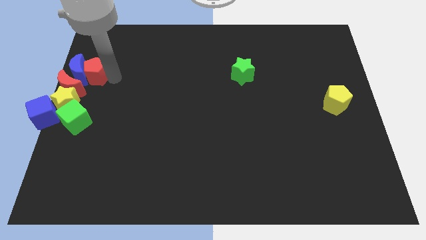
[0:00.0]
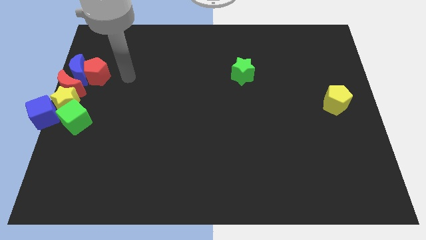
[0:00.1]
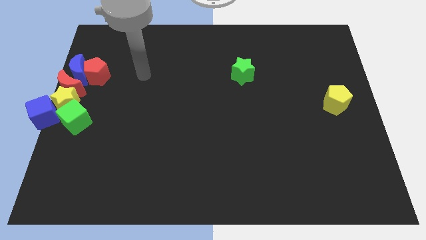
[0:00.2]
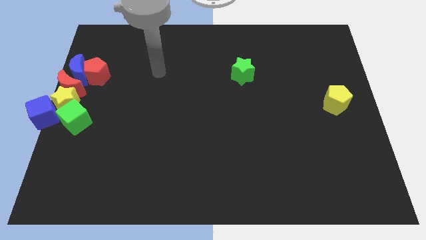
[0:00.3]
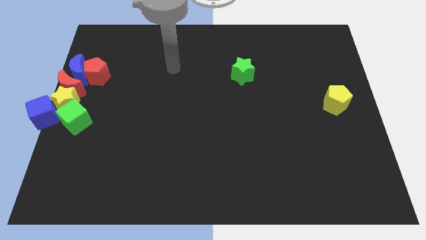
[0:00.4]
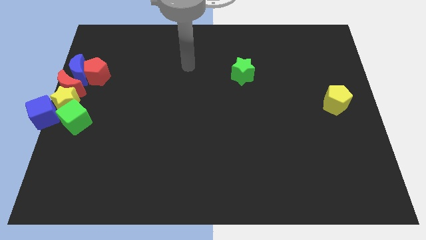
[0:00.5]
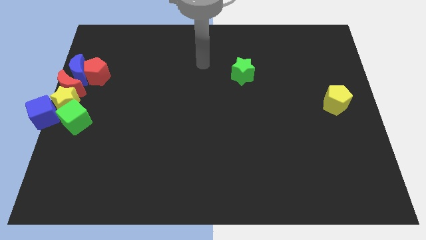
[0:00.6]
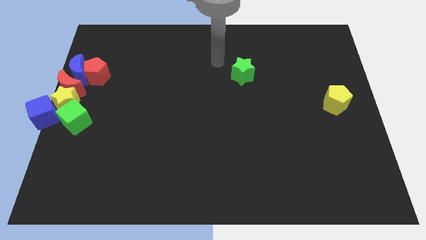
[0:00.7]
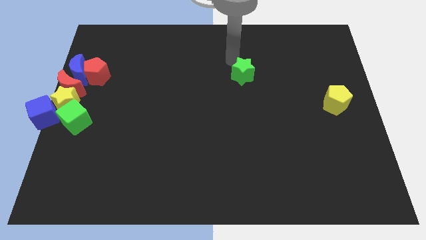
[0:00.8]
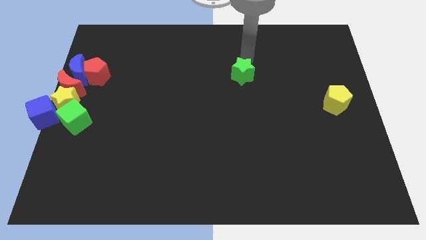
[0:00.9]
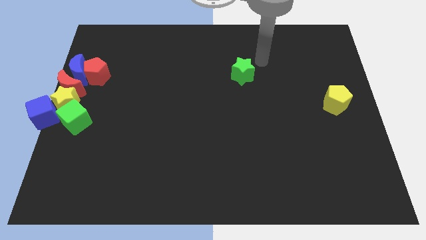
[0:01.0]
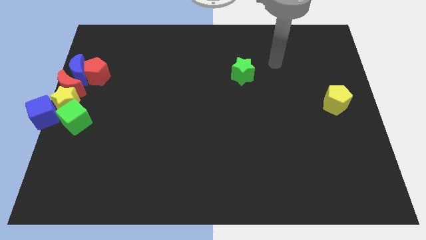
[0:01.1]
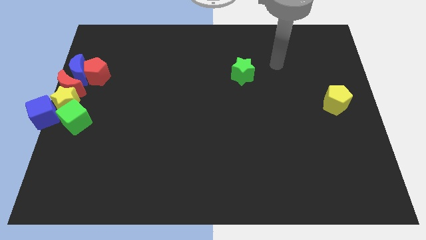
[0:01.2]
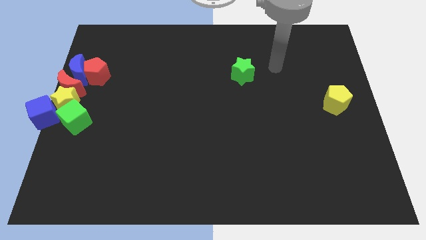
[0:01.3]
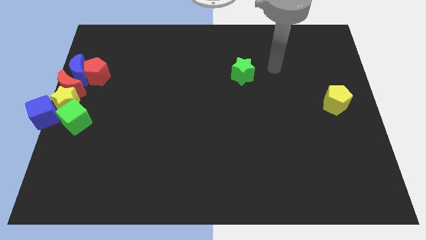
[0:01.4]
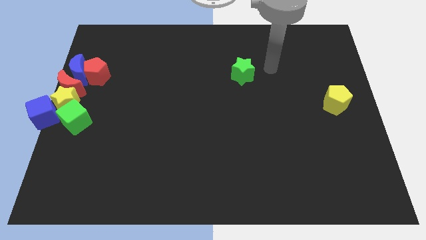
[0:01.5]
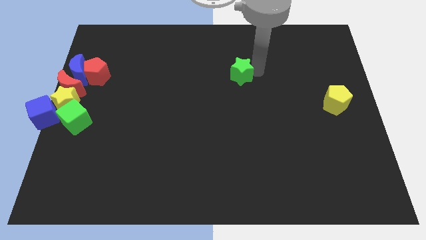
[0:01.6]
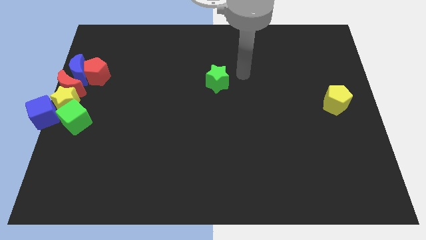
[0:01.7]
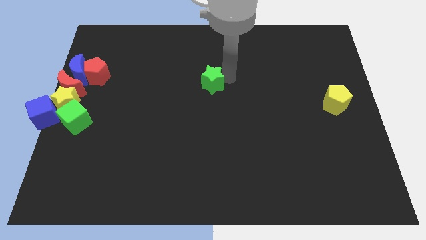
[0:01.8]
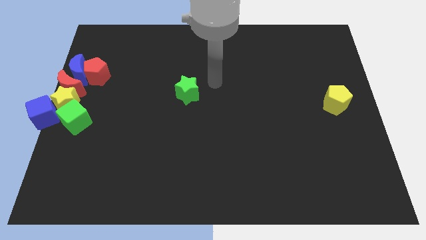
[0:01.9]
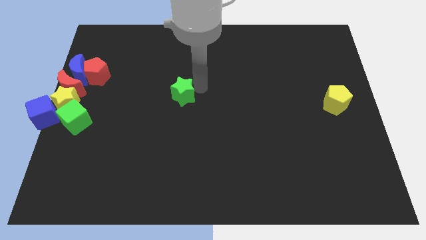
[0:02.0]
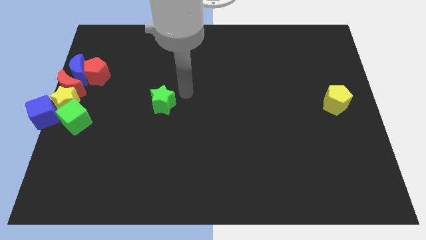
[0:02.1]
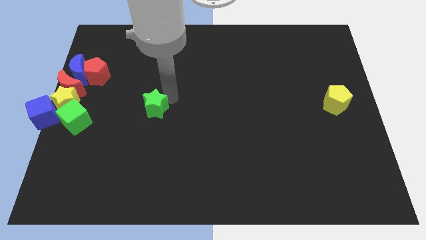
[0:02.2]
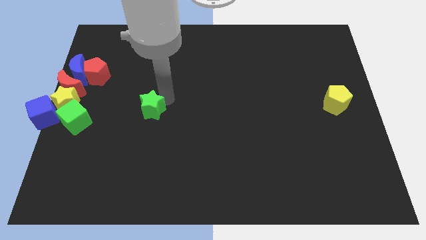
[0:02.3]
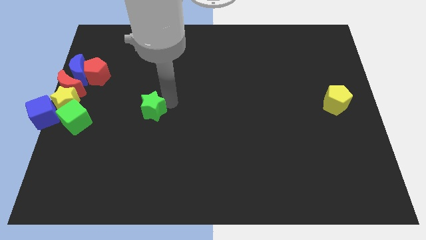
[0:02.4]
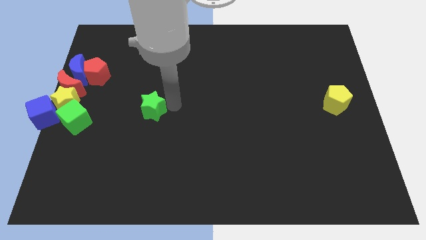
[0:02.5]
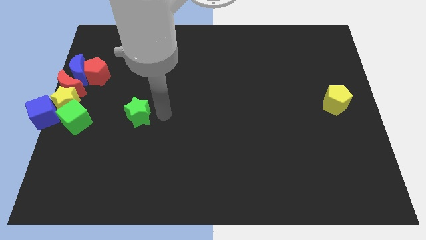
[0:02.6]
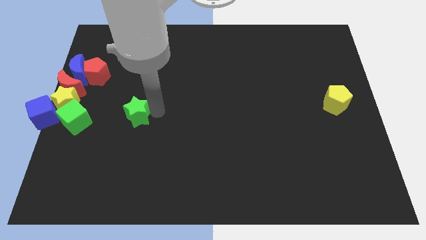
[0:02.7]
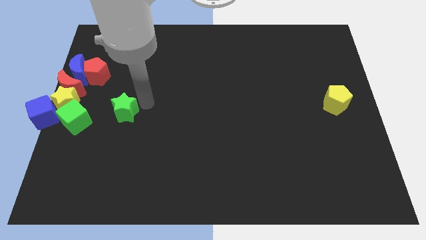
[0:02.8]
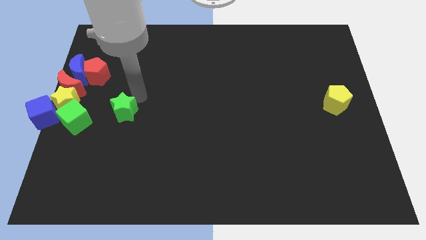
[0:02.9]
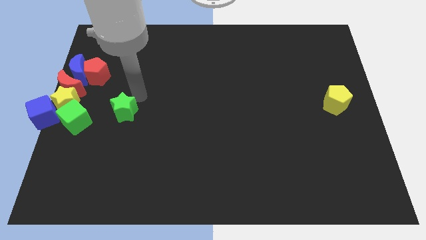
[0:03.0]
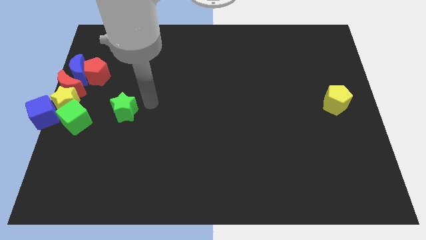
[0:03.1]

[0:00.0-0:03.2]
push the green star to the right side of the green cube

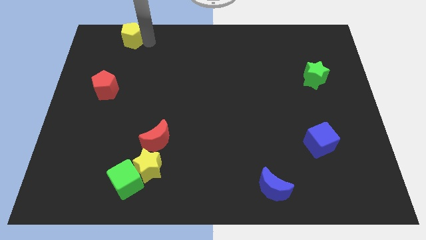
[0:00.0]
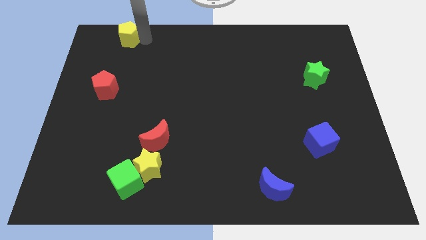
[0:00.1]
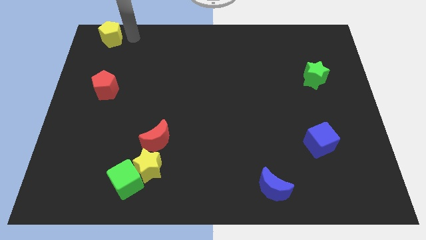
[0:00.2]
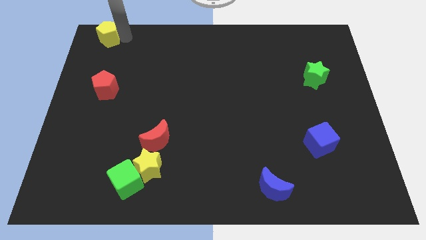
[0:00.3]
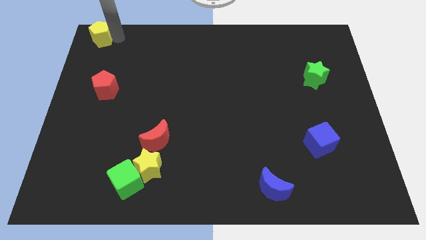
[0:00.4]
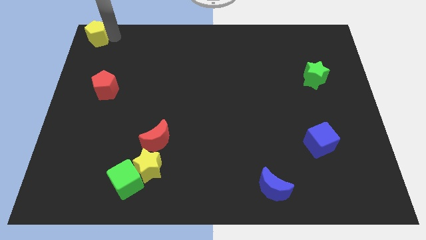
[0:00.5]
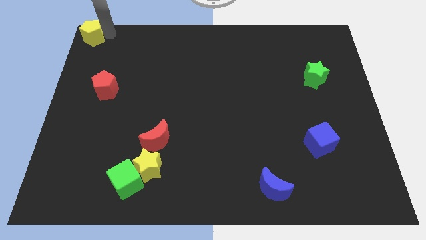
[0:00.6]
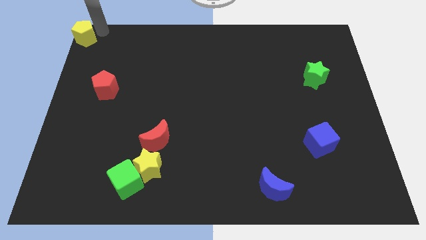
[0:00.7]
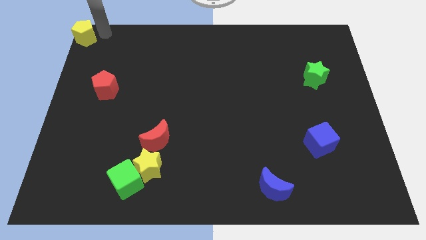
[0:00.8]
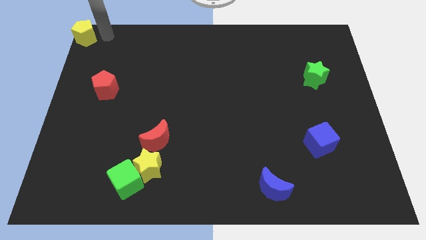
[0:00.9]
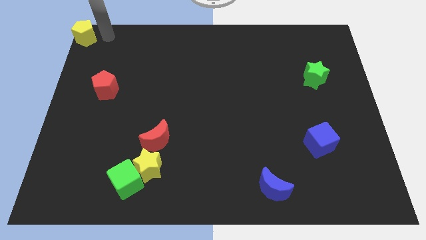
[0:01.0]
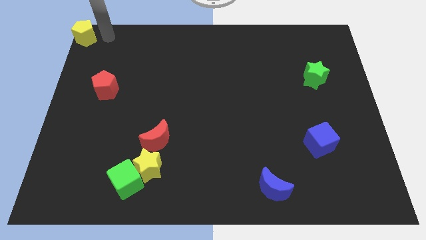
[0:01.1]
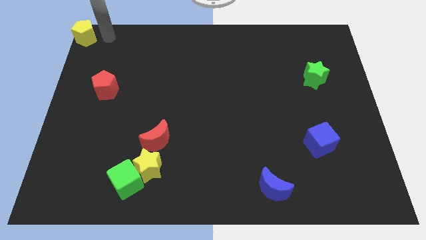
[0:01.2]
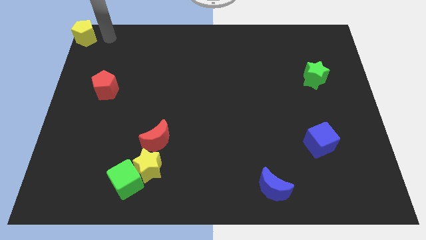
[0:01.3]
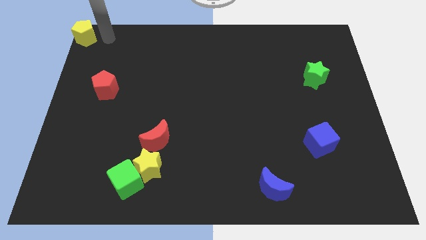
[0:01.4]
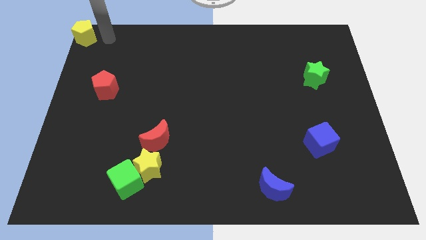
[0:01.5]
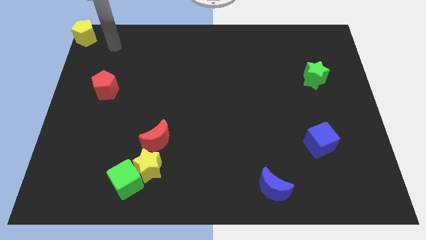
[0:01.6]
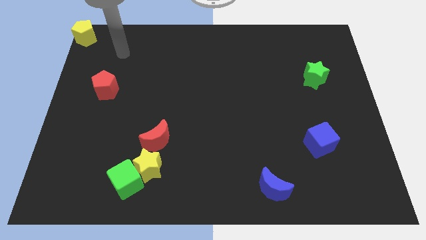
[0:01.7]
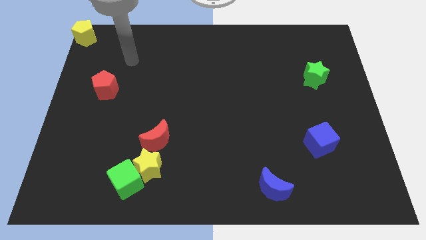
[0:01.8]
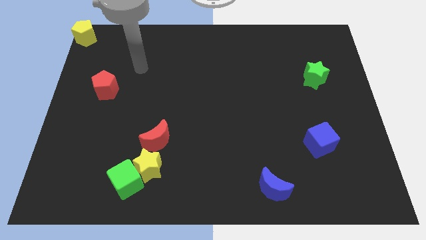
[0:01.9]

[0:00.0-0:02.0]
push the yellow pentagon to the top left corner

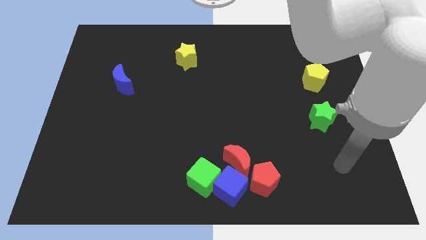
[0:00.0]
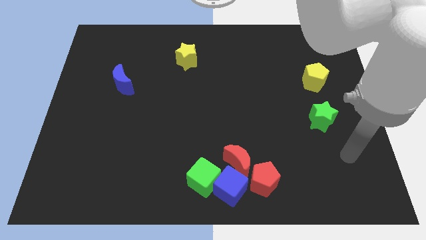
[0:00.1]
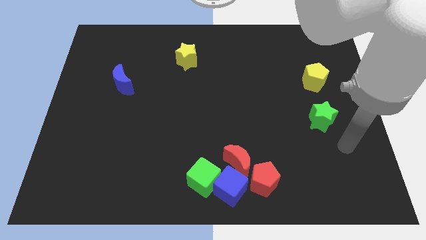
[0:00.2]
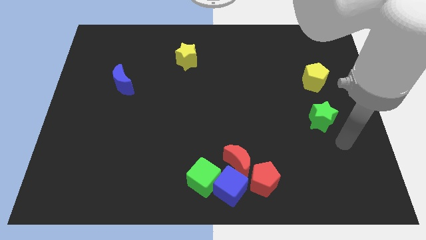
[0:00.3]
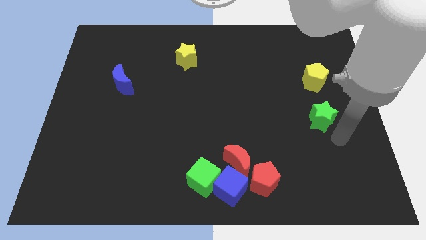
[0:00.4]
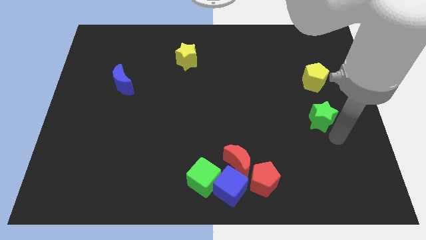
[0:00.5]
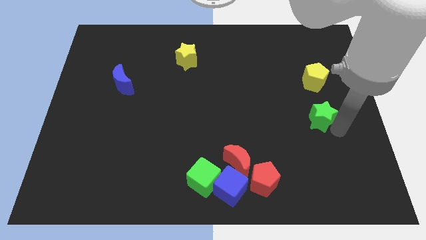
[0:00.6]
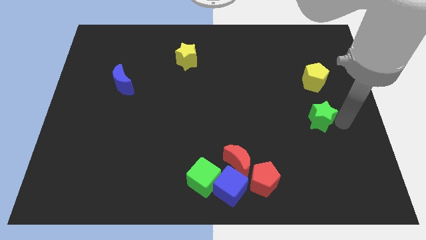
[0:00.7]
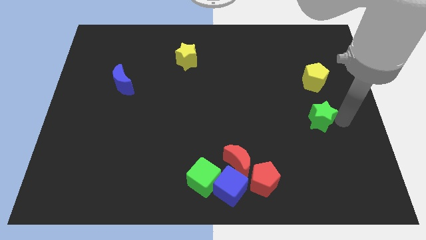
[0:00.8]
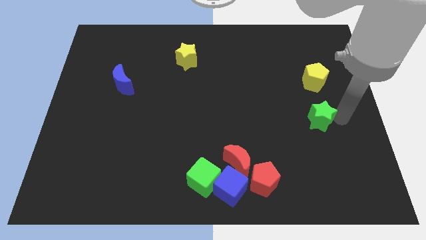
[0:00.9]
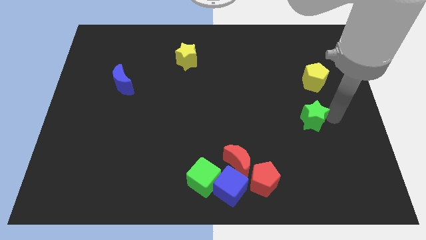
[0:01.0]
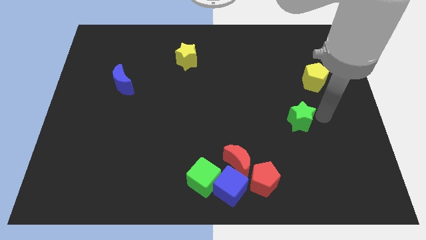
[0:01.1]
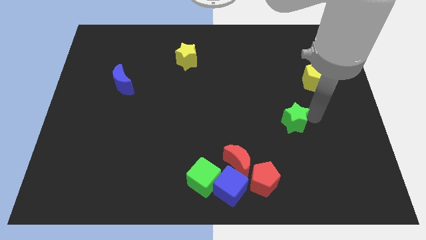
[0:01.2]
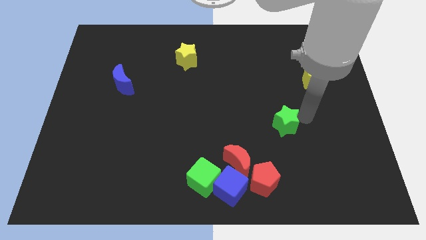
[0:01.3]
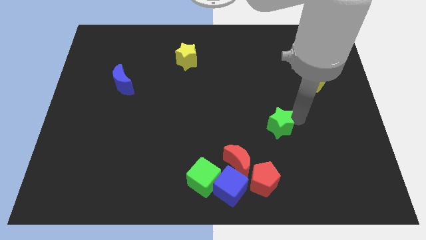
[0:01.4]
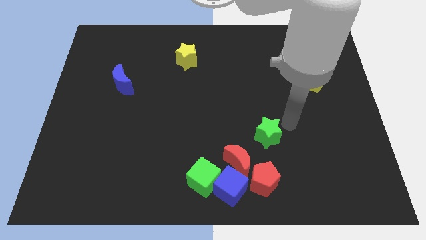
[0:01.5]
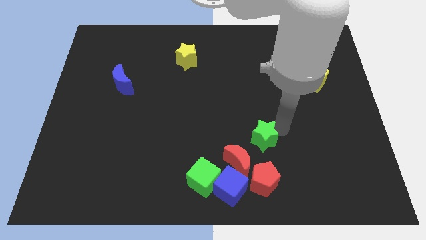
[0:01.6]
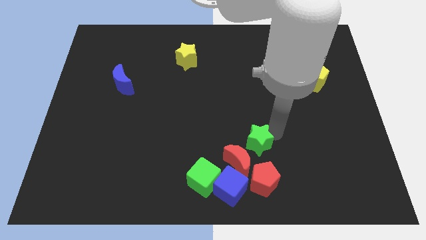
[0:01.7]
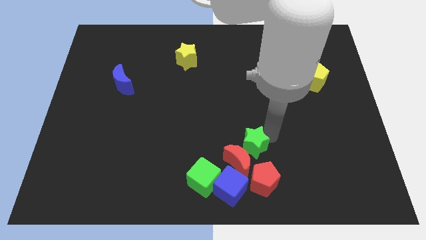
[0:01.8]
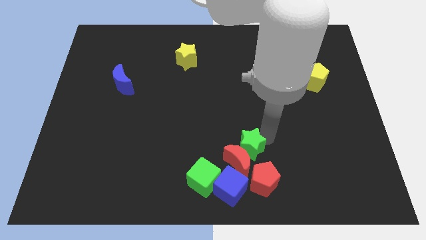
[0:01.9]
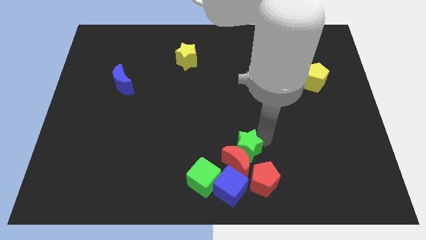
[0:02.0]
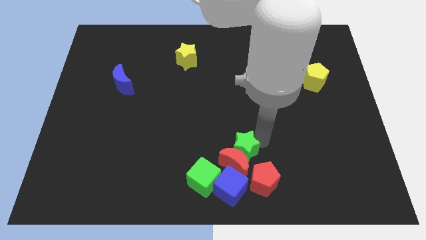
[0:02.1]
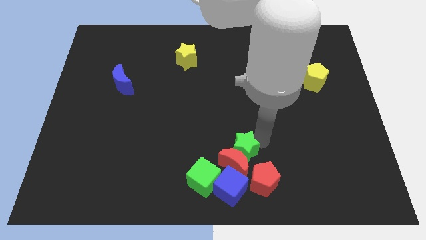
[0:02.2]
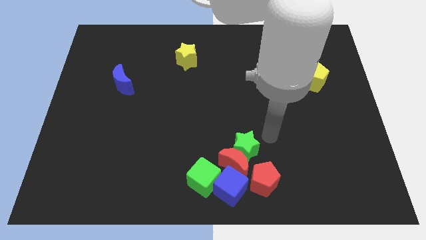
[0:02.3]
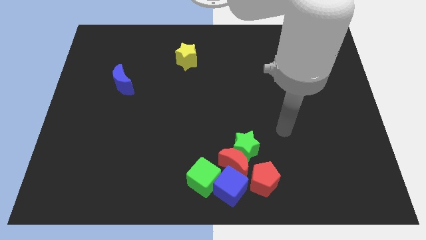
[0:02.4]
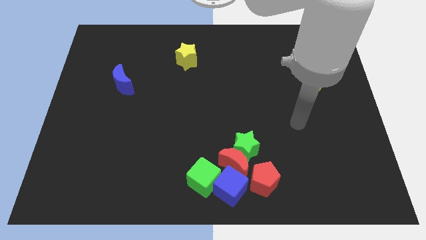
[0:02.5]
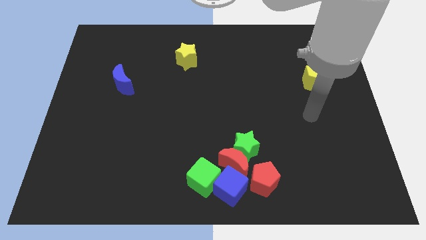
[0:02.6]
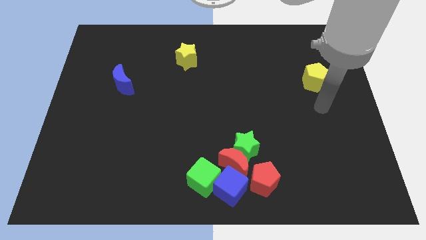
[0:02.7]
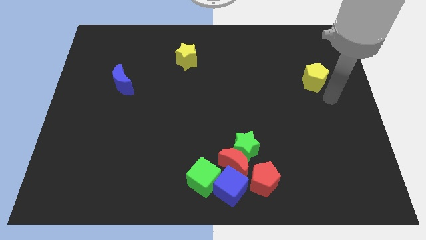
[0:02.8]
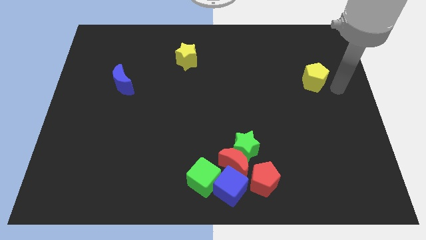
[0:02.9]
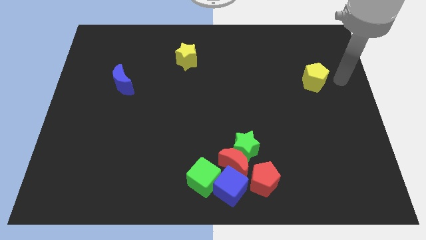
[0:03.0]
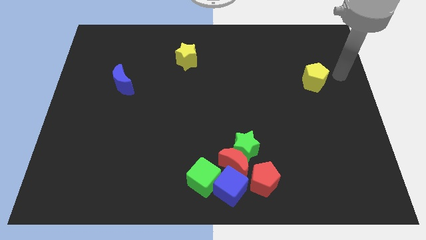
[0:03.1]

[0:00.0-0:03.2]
push the green star into red moon

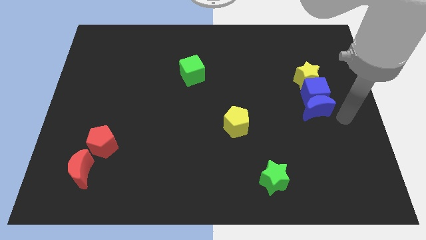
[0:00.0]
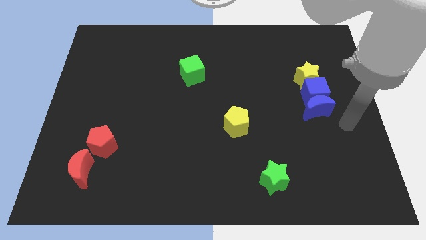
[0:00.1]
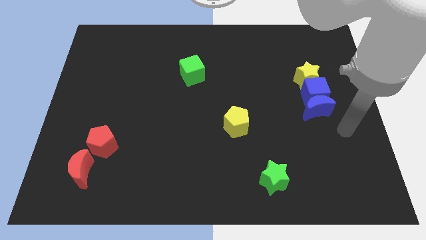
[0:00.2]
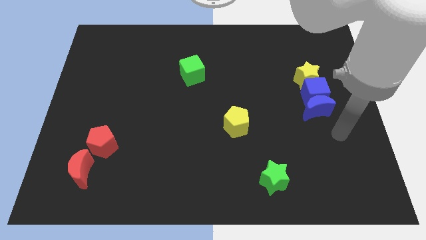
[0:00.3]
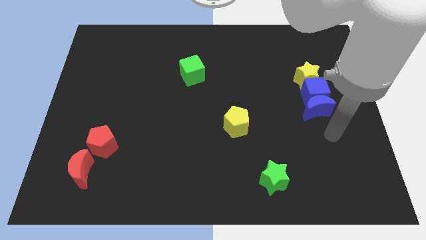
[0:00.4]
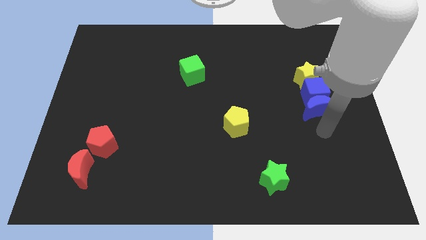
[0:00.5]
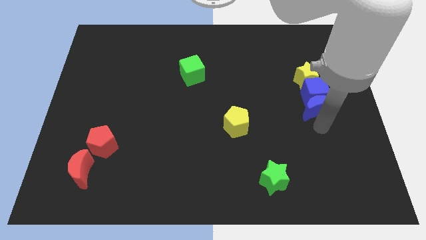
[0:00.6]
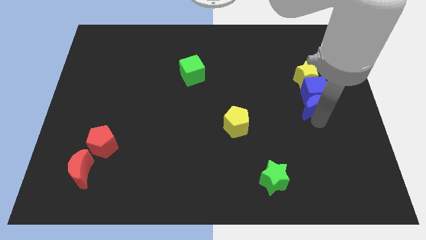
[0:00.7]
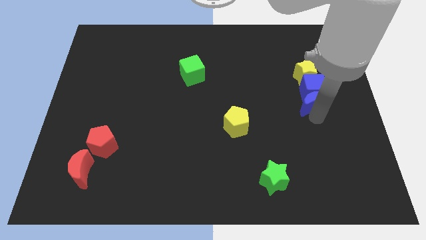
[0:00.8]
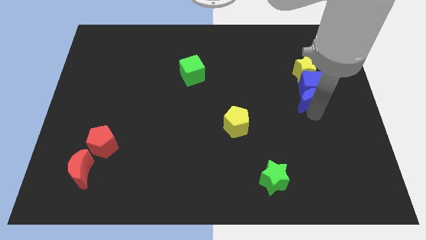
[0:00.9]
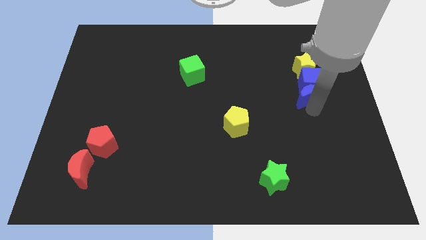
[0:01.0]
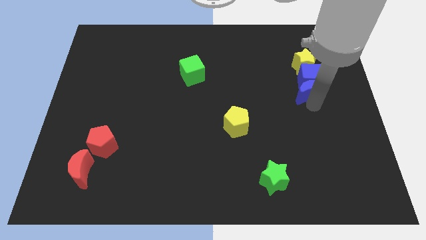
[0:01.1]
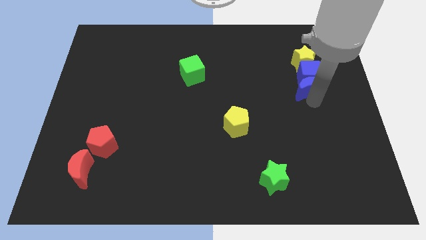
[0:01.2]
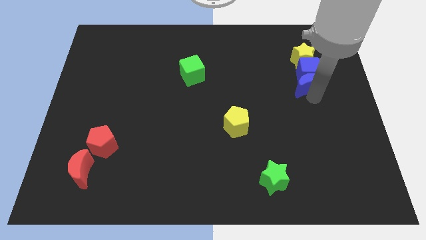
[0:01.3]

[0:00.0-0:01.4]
push blue moon along with other blocks upwards
